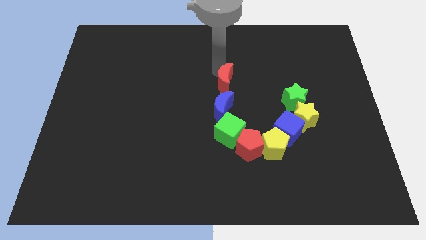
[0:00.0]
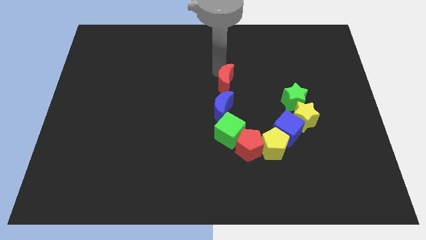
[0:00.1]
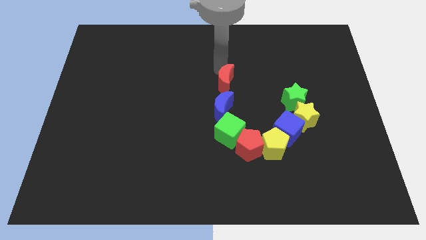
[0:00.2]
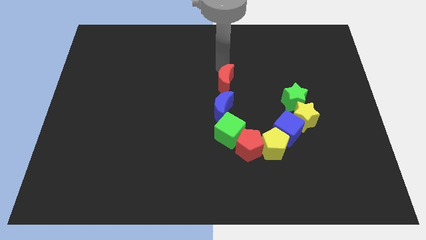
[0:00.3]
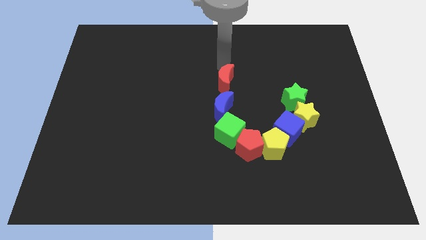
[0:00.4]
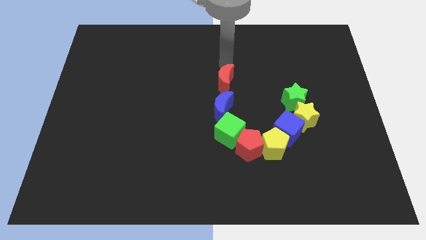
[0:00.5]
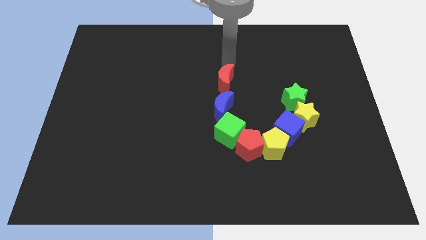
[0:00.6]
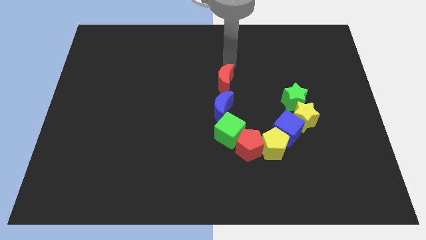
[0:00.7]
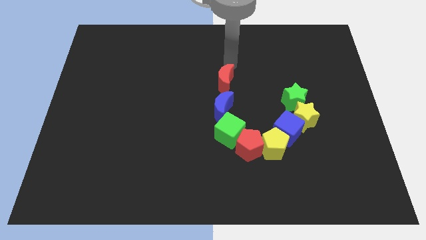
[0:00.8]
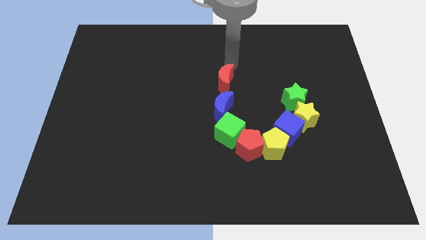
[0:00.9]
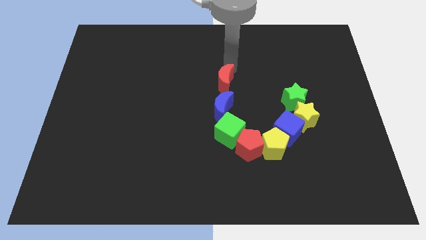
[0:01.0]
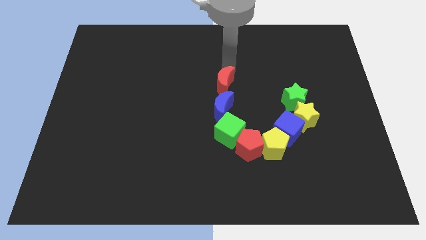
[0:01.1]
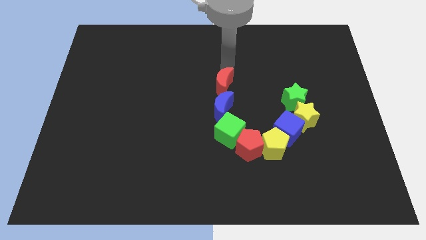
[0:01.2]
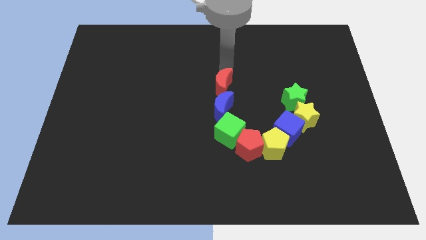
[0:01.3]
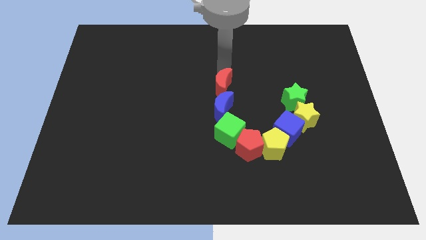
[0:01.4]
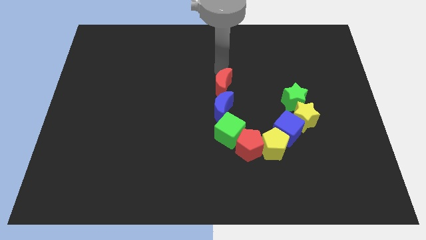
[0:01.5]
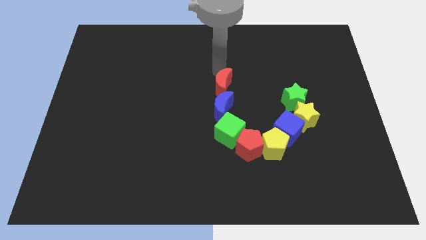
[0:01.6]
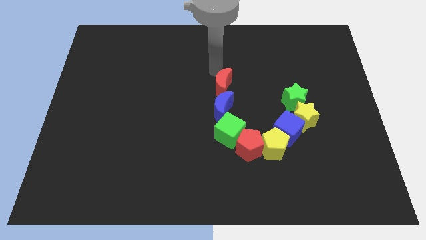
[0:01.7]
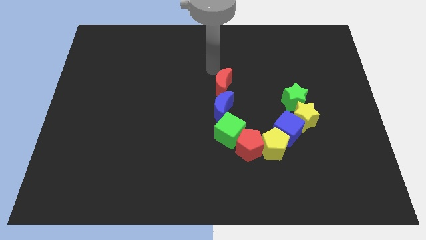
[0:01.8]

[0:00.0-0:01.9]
slightly move the red crescent towards the blue crescent

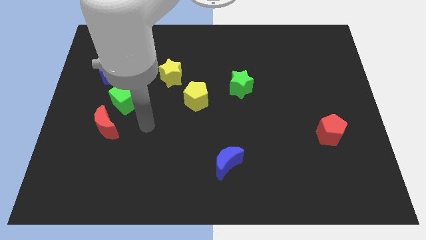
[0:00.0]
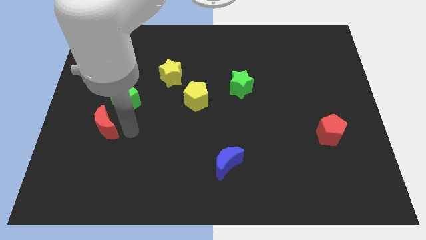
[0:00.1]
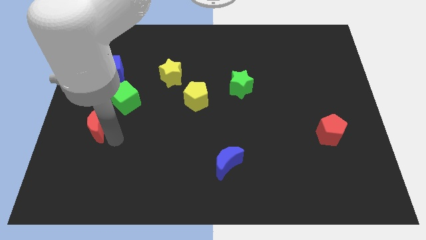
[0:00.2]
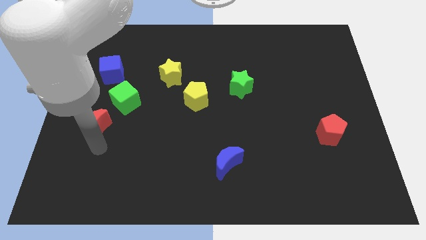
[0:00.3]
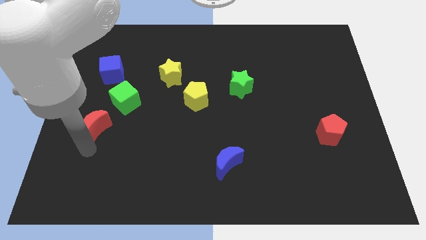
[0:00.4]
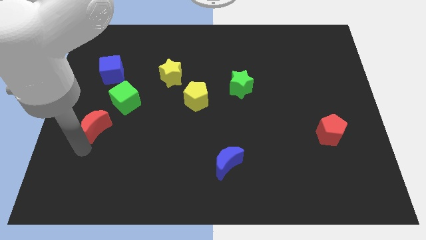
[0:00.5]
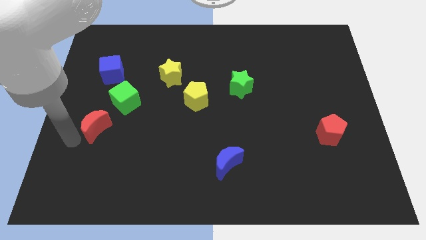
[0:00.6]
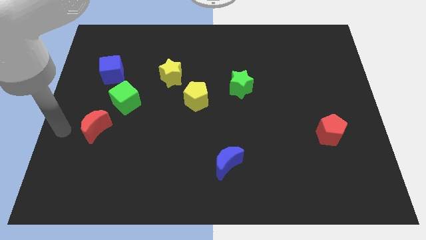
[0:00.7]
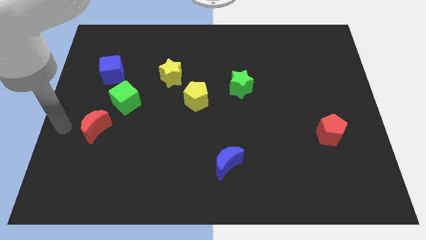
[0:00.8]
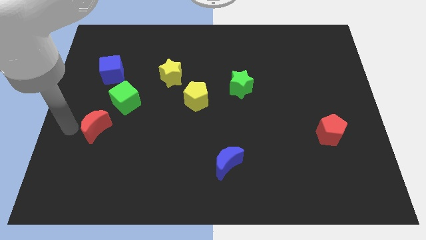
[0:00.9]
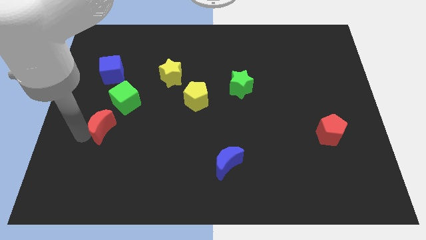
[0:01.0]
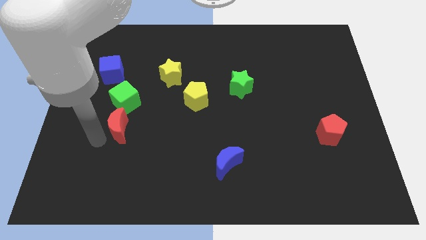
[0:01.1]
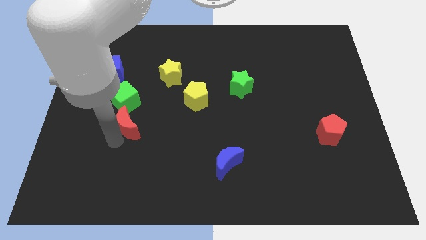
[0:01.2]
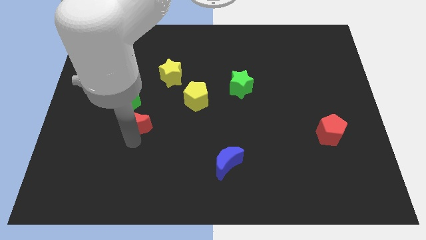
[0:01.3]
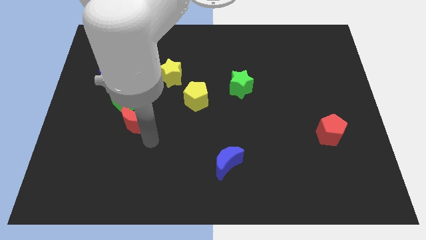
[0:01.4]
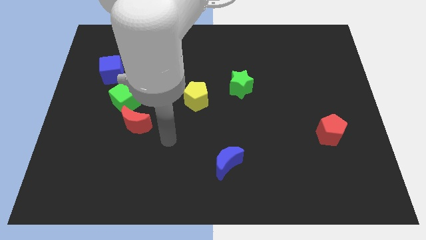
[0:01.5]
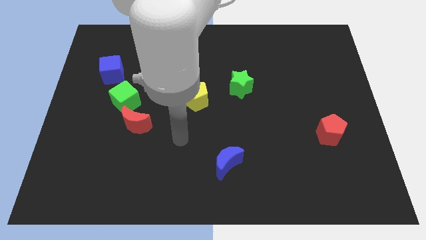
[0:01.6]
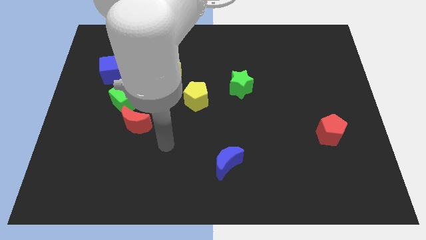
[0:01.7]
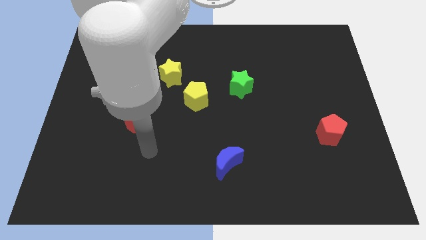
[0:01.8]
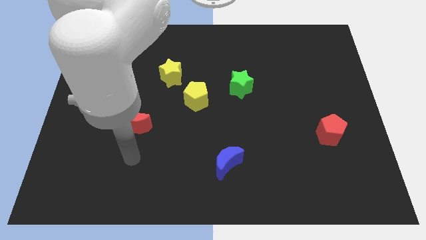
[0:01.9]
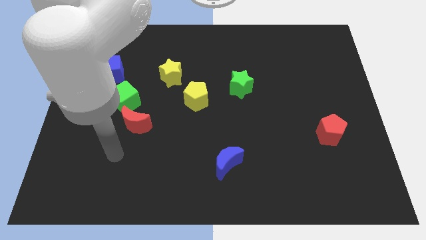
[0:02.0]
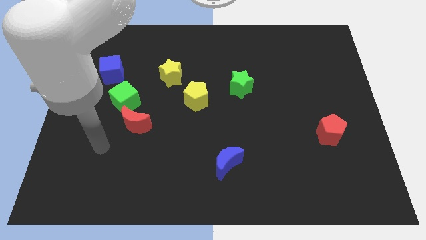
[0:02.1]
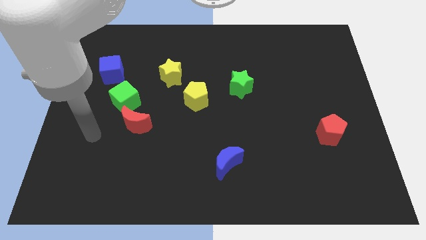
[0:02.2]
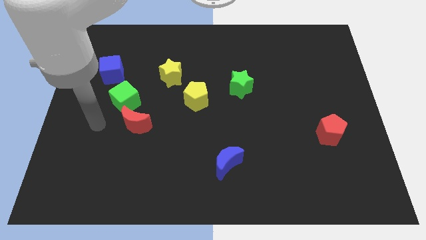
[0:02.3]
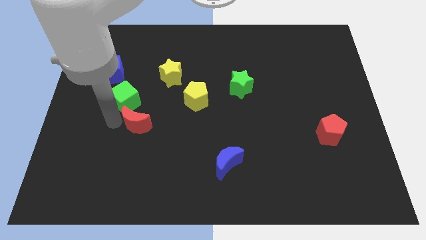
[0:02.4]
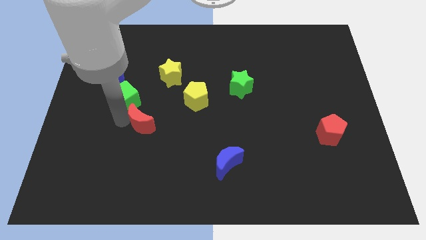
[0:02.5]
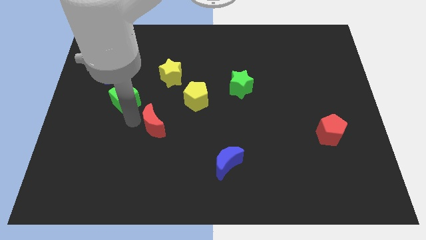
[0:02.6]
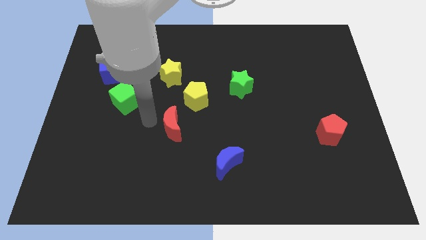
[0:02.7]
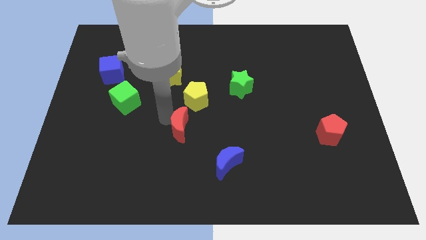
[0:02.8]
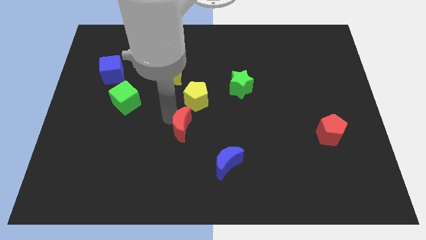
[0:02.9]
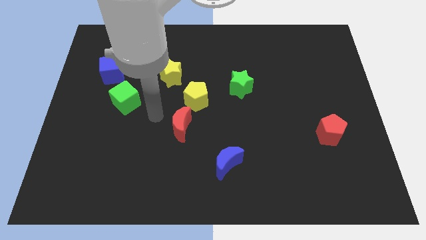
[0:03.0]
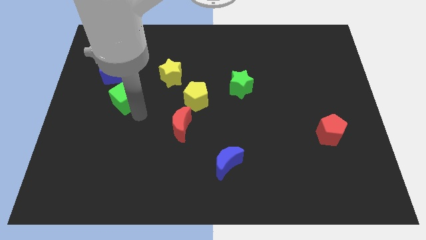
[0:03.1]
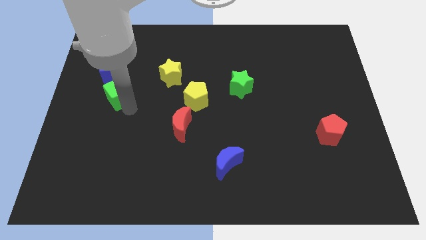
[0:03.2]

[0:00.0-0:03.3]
push the red crescent at the bottom of the yellow pentagon

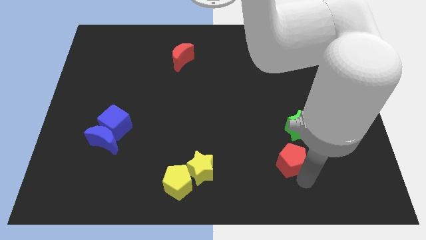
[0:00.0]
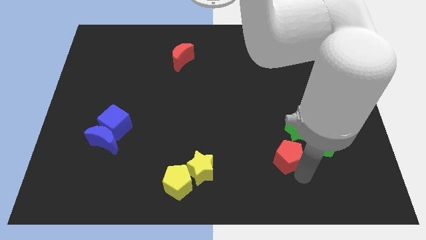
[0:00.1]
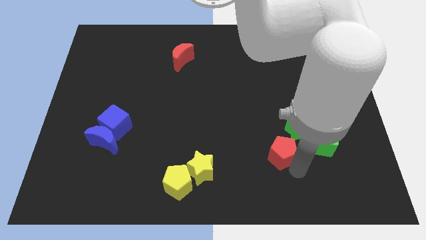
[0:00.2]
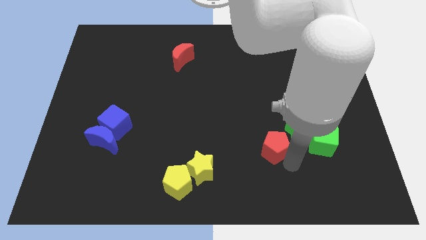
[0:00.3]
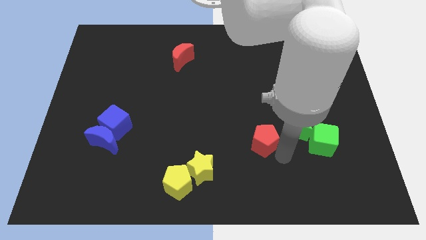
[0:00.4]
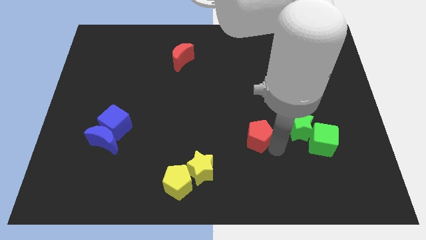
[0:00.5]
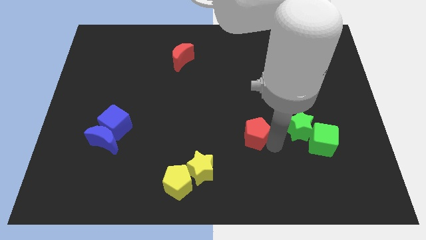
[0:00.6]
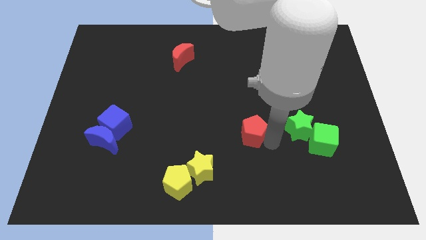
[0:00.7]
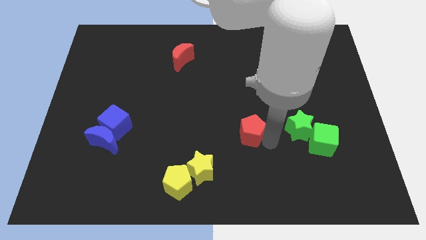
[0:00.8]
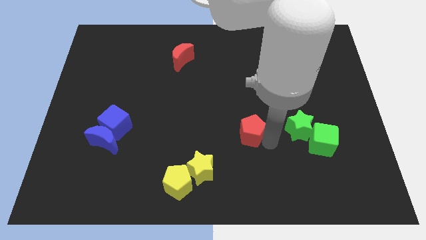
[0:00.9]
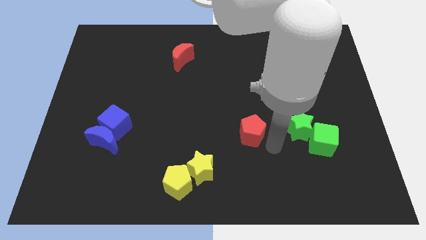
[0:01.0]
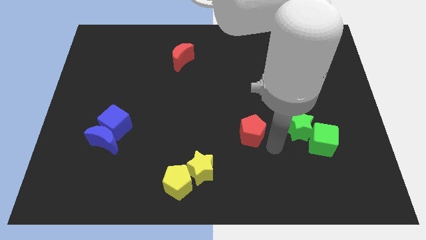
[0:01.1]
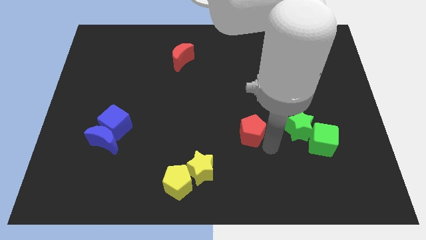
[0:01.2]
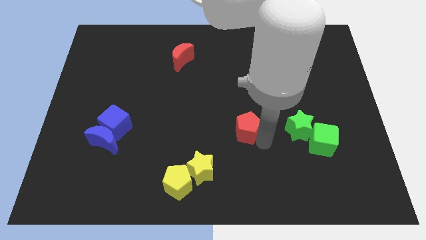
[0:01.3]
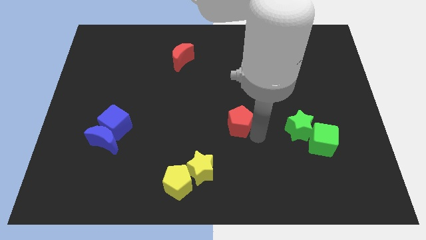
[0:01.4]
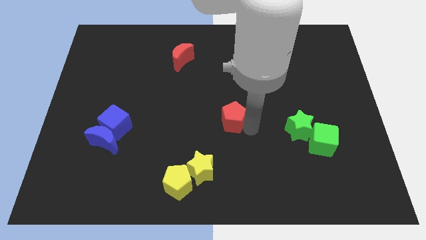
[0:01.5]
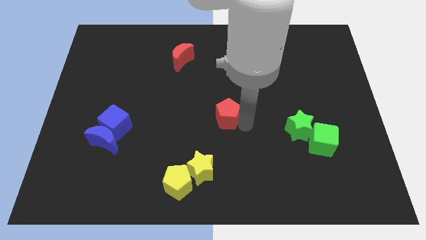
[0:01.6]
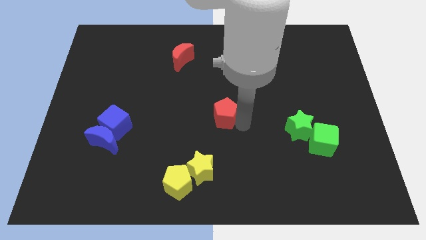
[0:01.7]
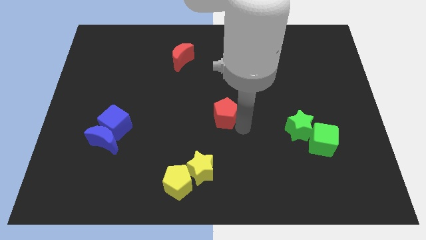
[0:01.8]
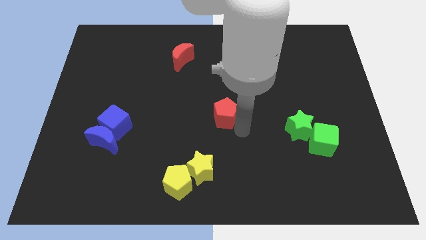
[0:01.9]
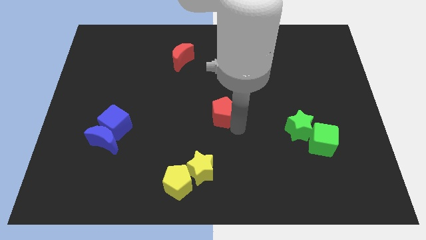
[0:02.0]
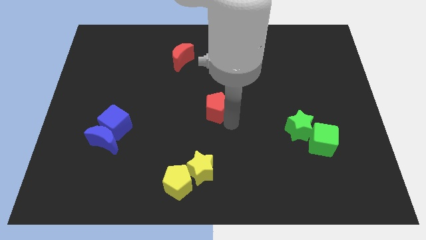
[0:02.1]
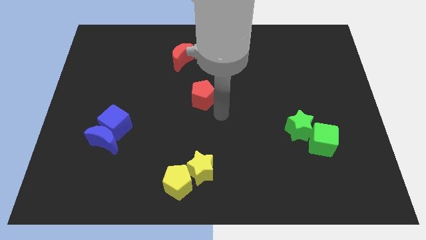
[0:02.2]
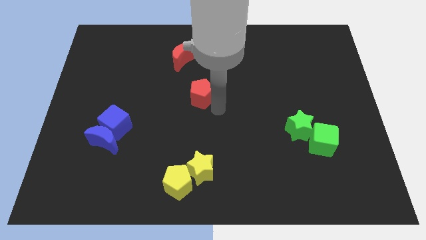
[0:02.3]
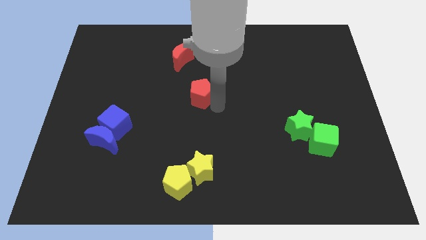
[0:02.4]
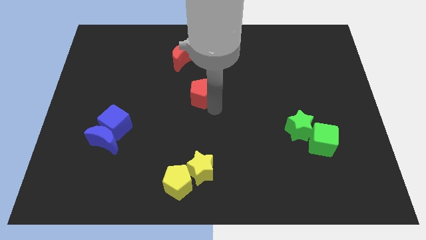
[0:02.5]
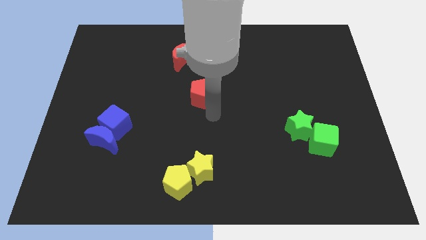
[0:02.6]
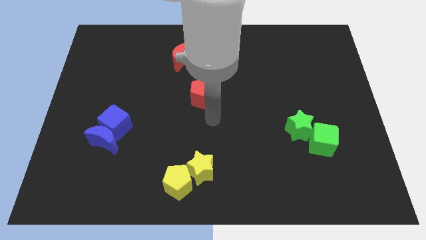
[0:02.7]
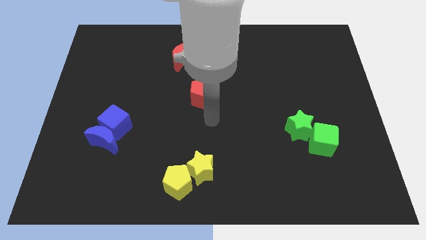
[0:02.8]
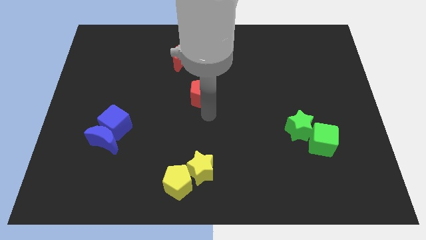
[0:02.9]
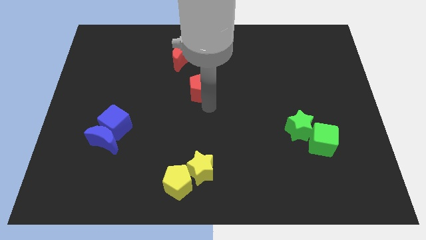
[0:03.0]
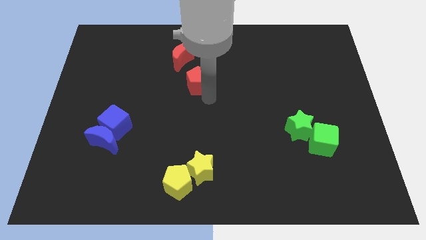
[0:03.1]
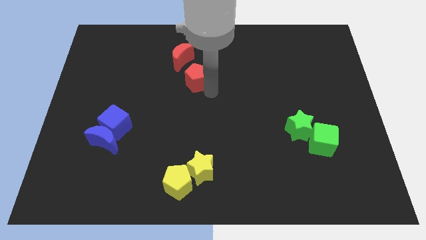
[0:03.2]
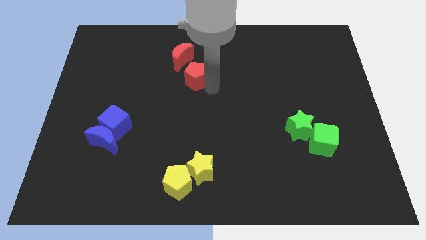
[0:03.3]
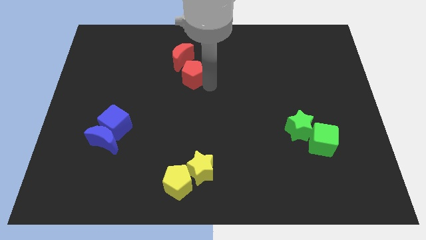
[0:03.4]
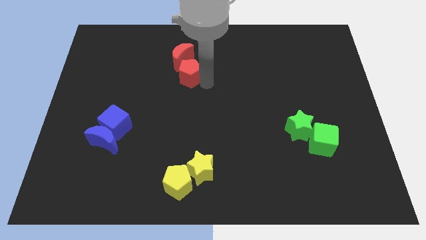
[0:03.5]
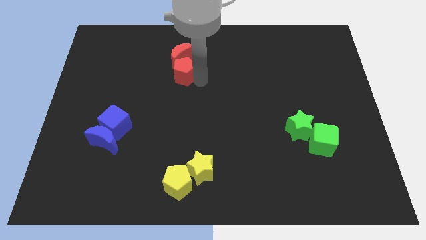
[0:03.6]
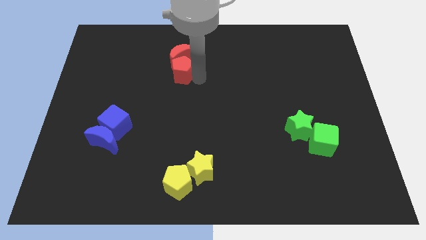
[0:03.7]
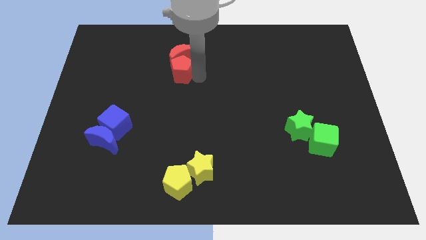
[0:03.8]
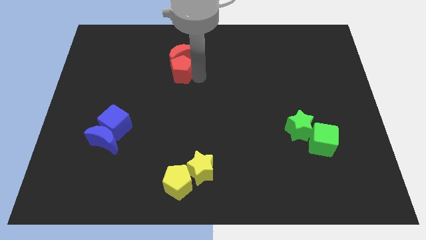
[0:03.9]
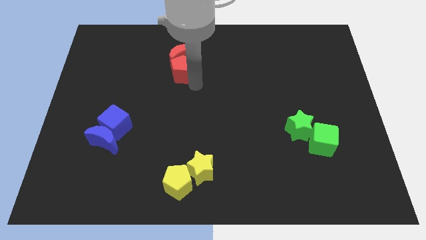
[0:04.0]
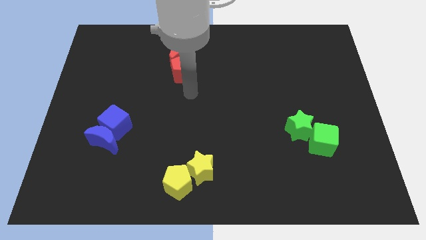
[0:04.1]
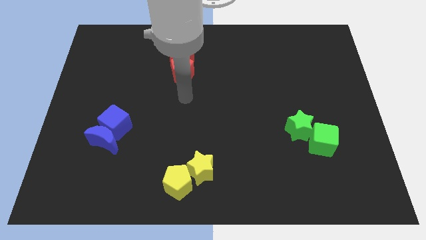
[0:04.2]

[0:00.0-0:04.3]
push the red pentagon into the red crescent
